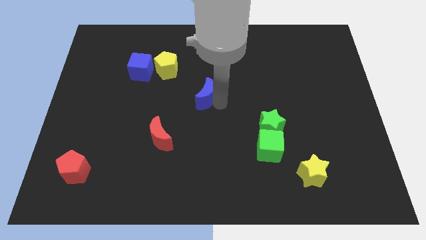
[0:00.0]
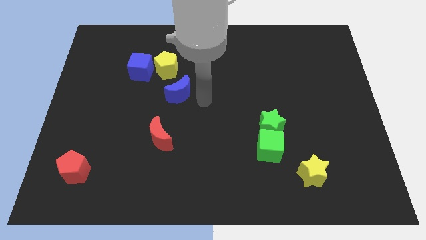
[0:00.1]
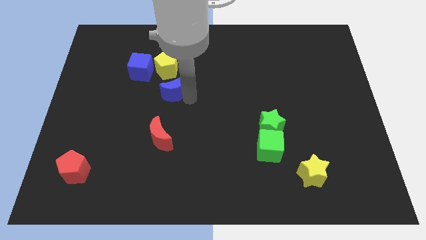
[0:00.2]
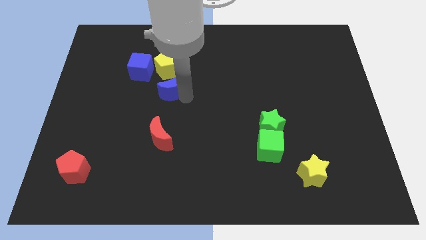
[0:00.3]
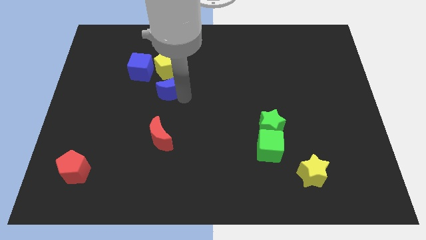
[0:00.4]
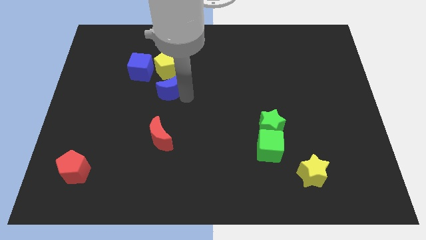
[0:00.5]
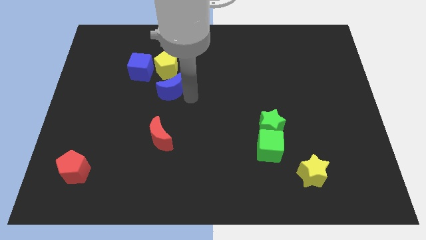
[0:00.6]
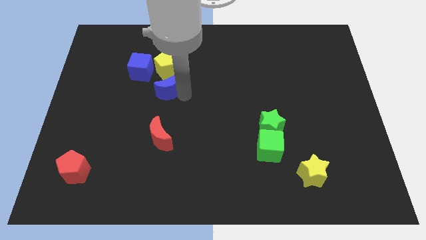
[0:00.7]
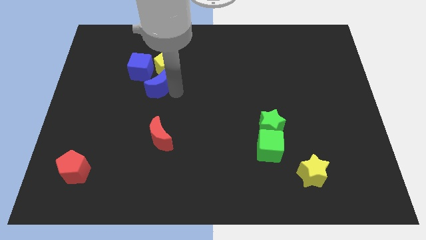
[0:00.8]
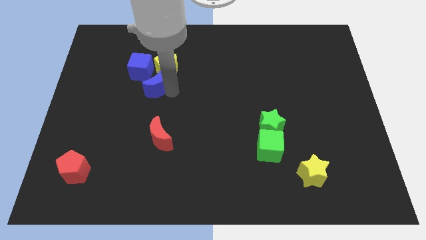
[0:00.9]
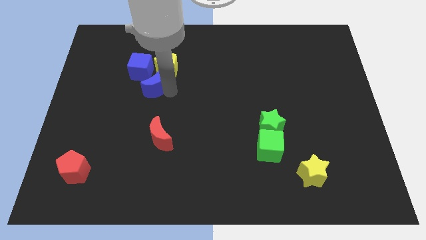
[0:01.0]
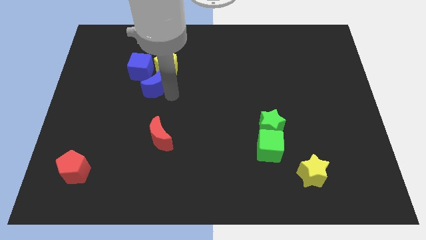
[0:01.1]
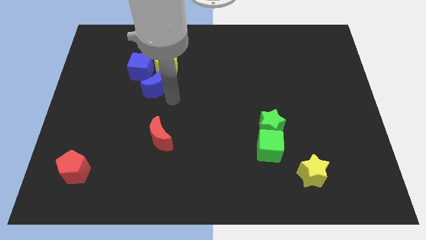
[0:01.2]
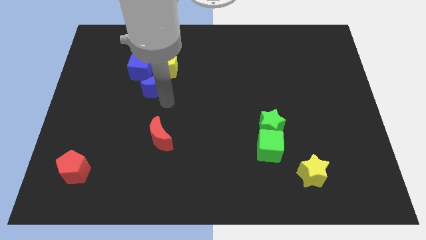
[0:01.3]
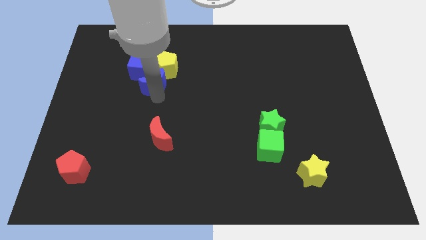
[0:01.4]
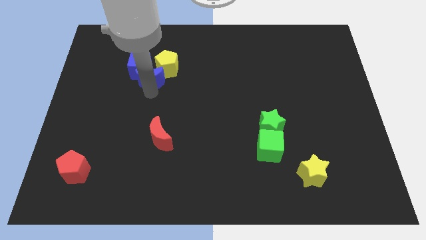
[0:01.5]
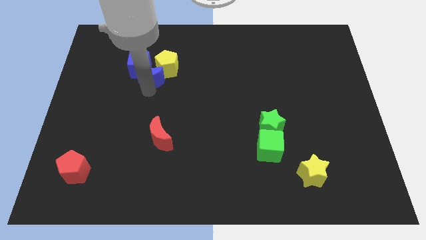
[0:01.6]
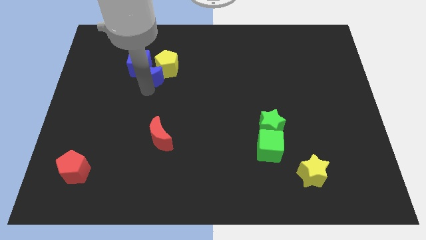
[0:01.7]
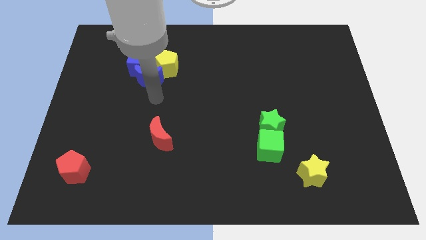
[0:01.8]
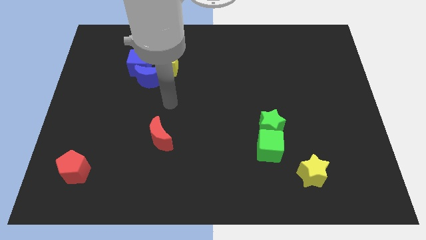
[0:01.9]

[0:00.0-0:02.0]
push the blue crescent into the bottom side of the blue cube and the yellow pentagon

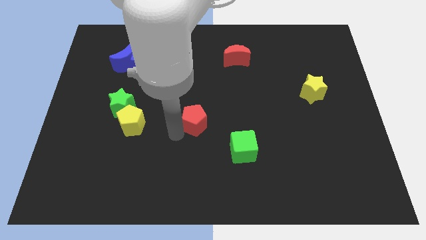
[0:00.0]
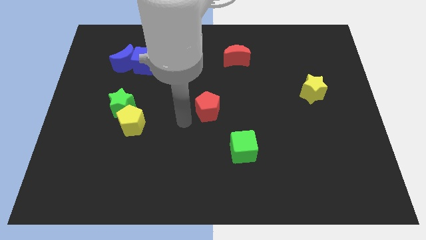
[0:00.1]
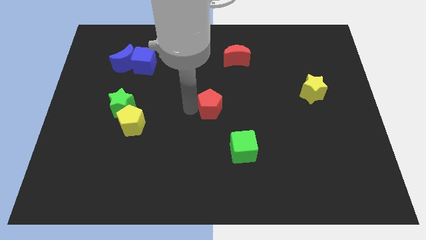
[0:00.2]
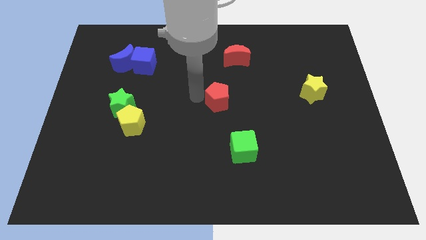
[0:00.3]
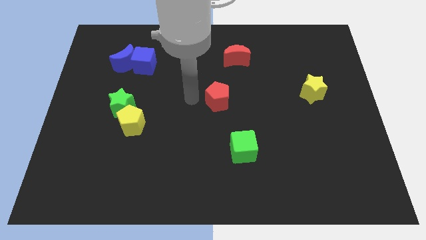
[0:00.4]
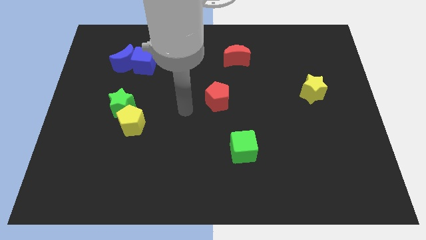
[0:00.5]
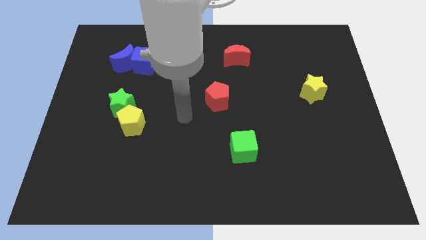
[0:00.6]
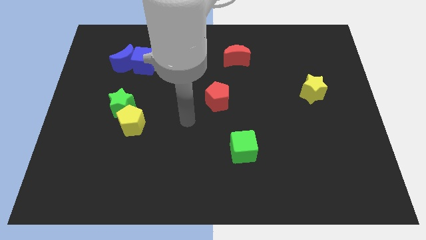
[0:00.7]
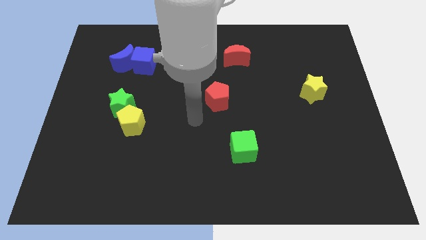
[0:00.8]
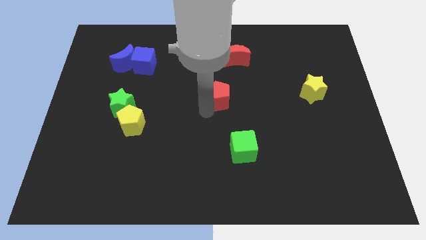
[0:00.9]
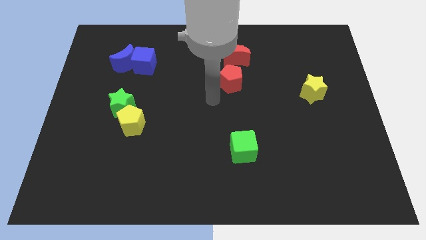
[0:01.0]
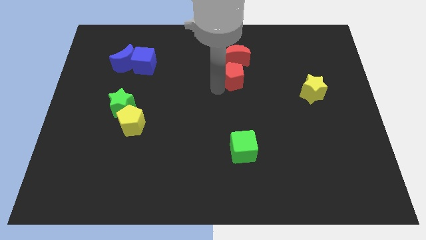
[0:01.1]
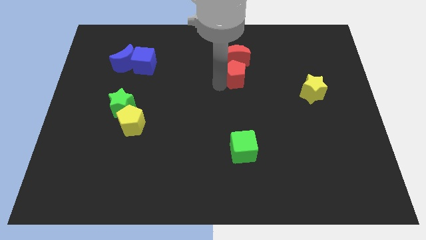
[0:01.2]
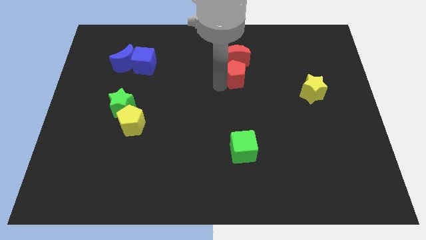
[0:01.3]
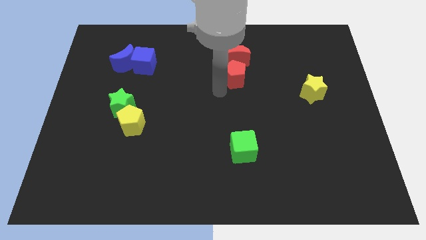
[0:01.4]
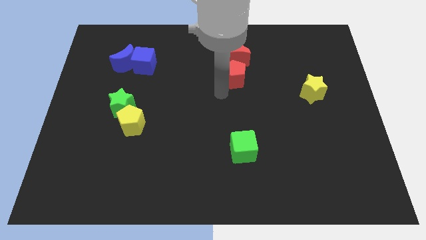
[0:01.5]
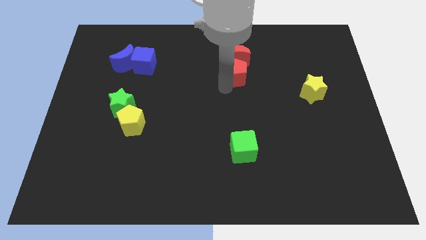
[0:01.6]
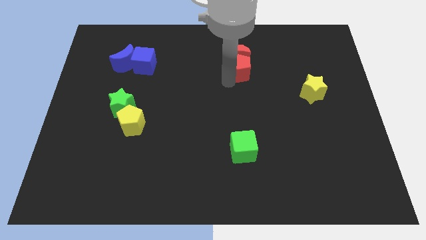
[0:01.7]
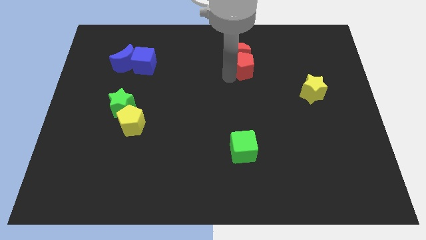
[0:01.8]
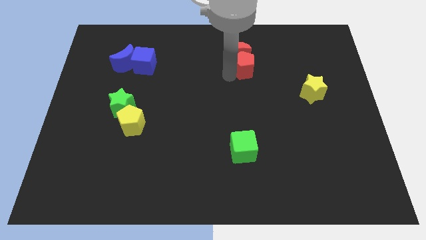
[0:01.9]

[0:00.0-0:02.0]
push the red pentagon close to the red crescent

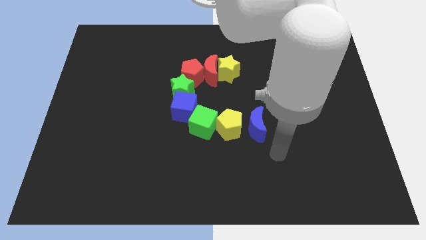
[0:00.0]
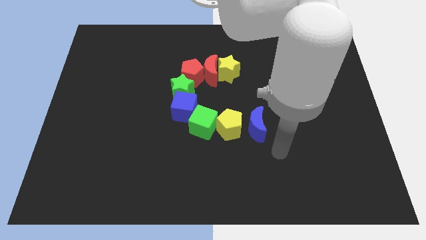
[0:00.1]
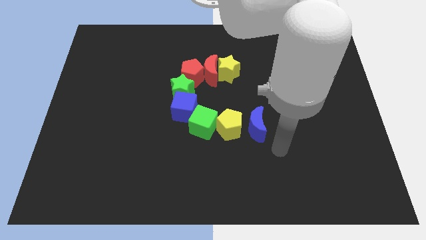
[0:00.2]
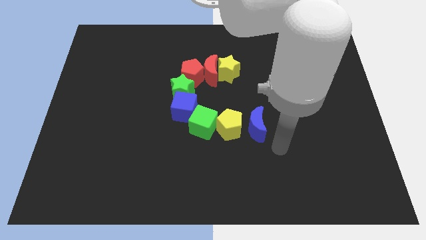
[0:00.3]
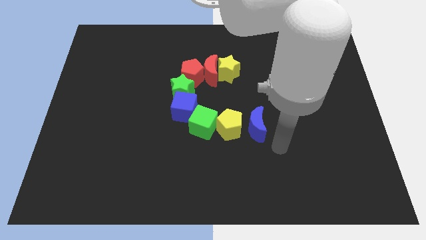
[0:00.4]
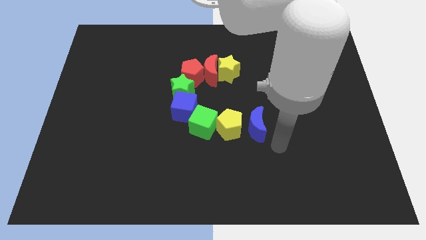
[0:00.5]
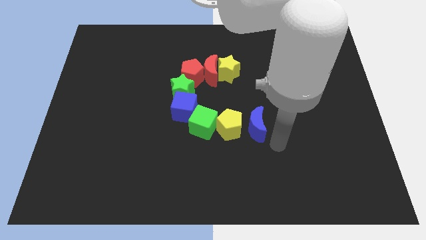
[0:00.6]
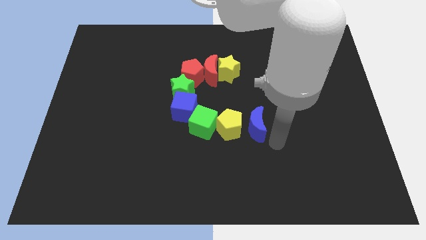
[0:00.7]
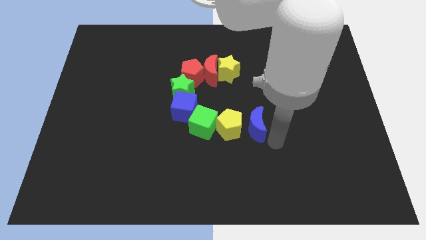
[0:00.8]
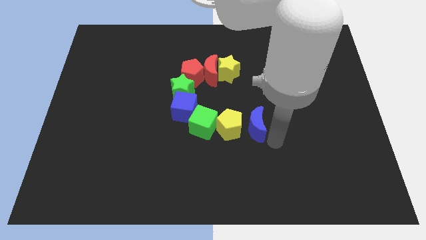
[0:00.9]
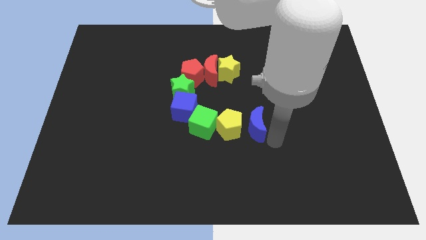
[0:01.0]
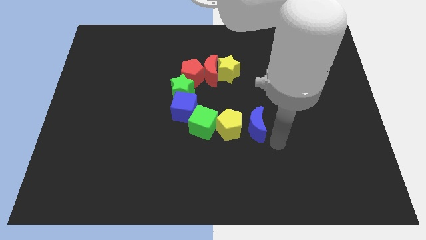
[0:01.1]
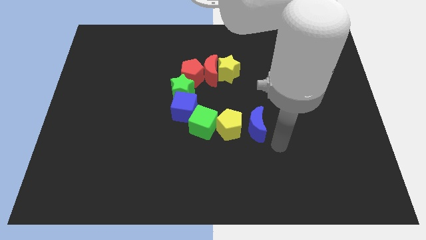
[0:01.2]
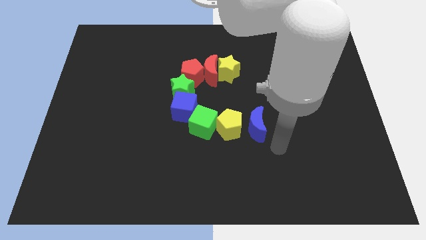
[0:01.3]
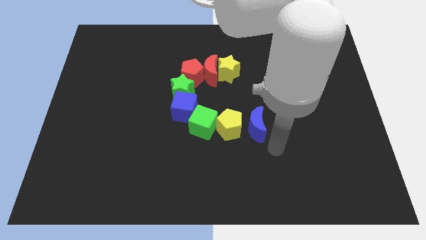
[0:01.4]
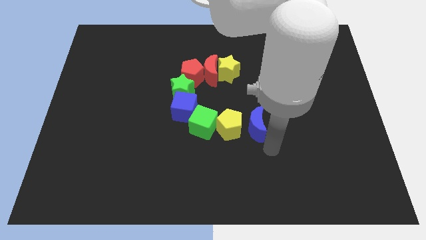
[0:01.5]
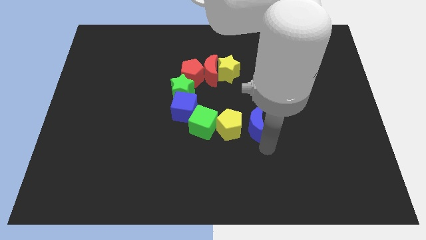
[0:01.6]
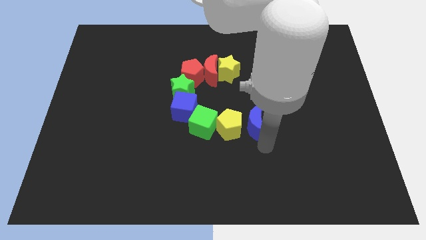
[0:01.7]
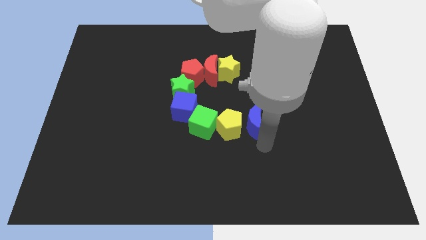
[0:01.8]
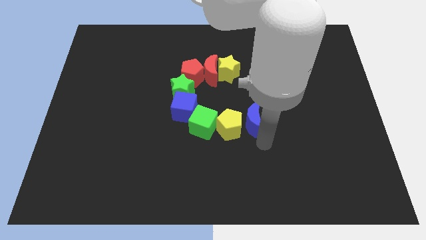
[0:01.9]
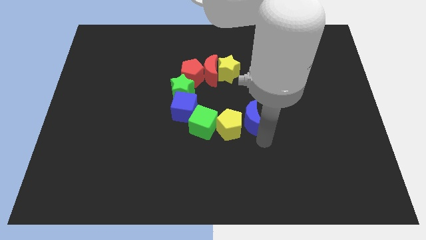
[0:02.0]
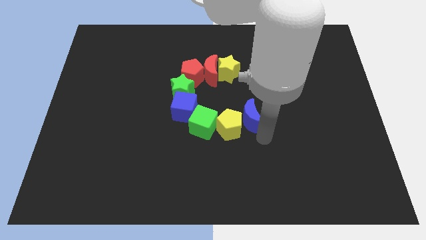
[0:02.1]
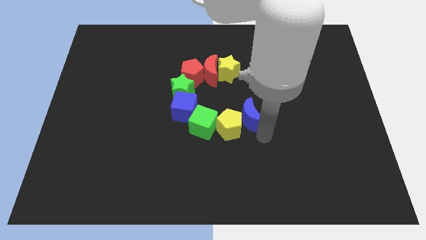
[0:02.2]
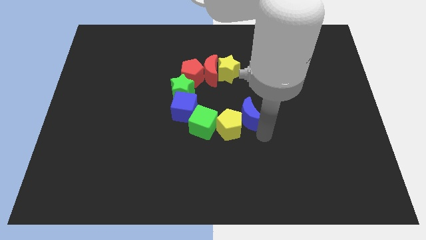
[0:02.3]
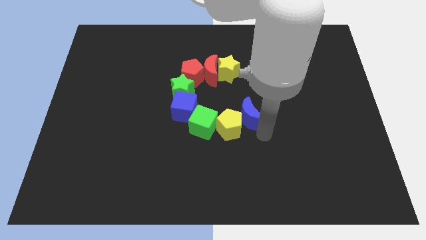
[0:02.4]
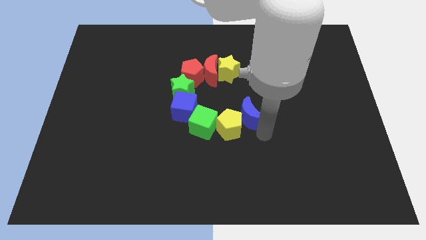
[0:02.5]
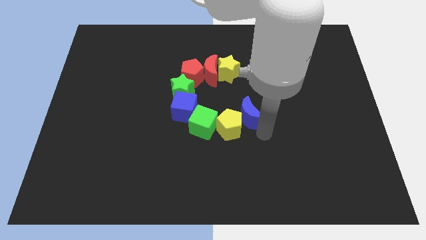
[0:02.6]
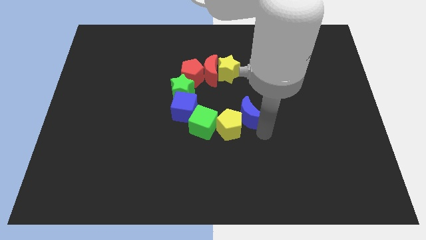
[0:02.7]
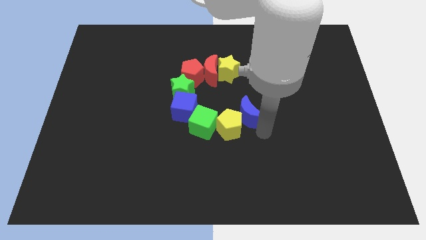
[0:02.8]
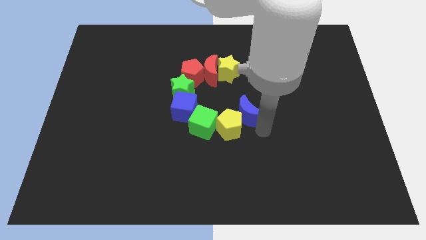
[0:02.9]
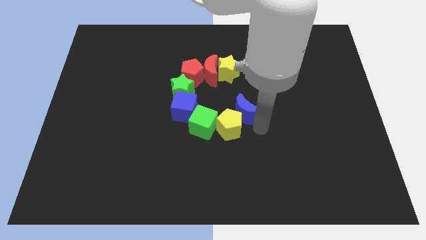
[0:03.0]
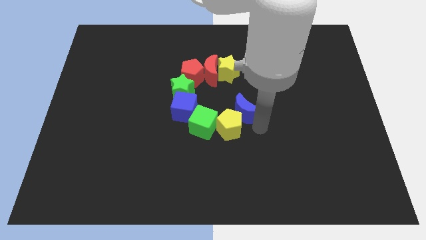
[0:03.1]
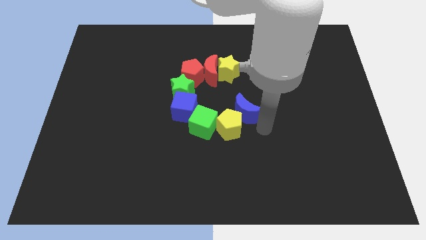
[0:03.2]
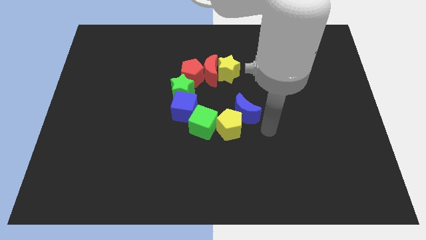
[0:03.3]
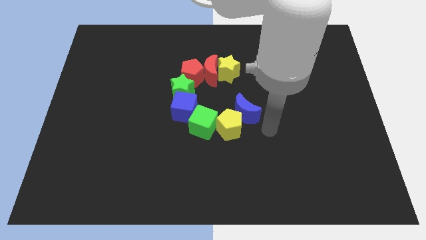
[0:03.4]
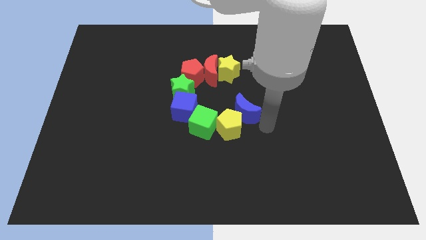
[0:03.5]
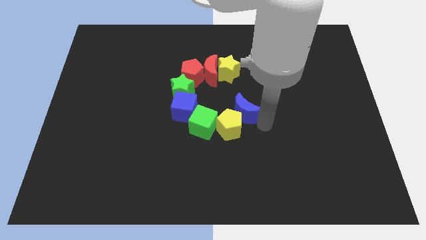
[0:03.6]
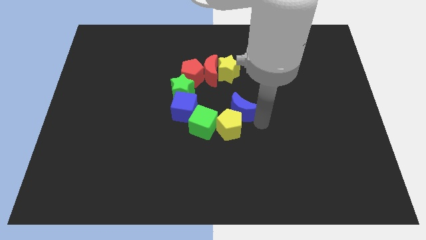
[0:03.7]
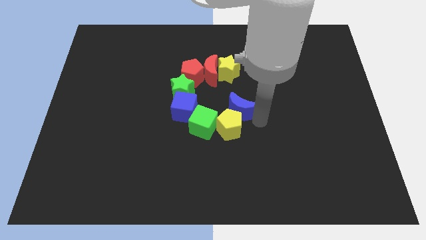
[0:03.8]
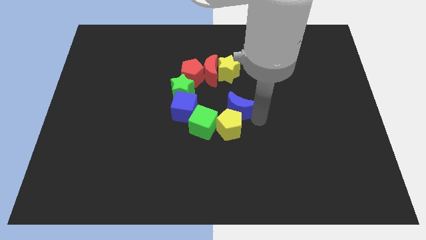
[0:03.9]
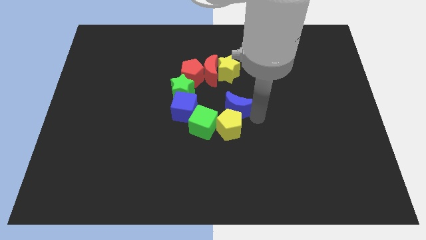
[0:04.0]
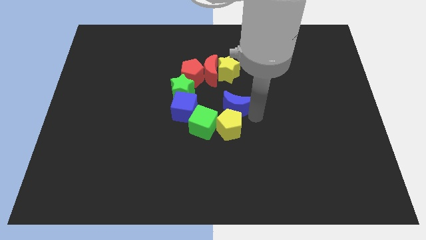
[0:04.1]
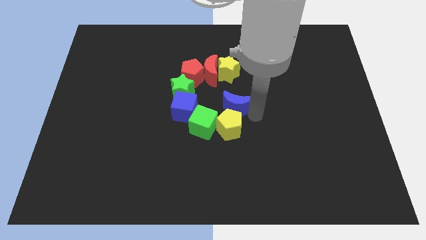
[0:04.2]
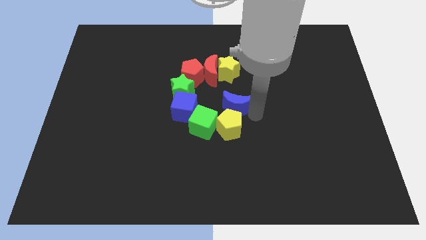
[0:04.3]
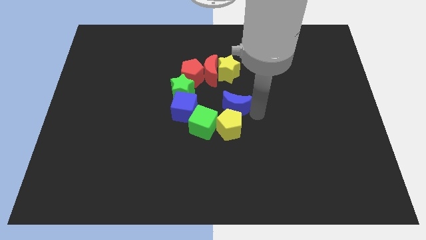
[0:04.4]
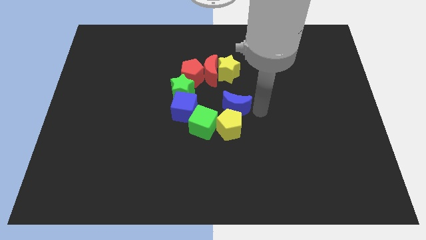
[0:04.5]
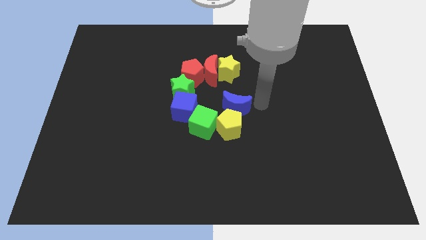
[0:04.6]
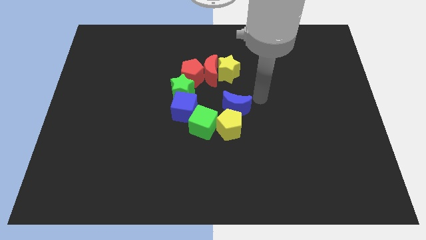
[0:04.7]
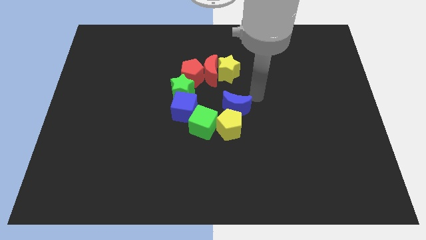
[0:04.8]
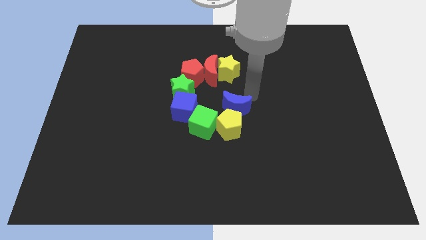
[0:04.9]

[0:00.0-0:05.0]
place the blue crescent above the yellow pentagon
